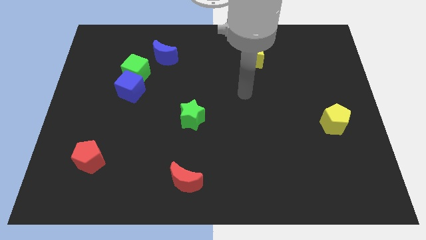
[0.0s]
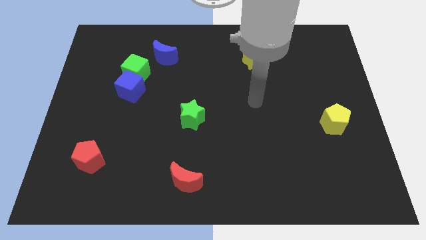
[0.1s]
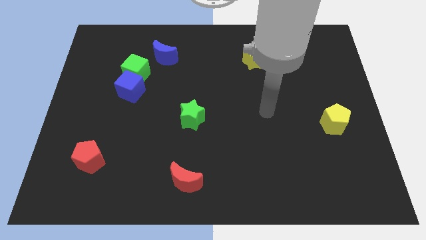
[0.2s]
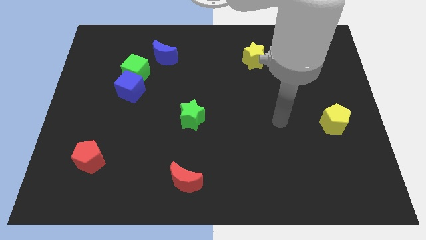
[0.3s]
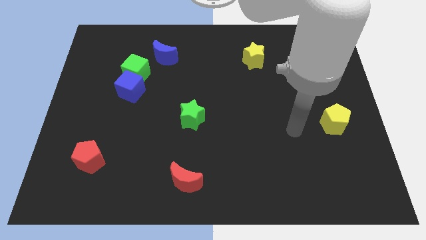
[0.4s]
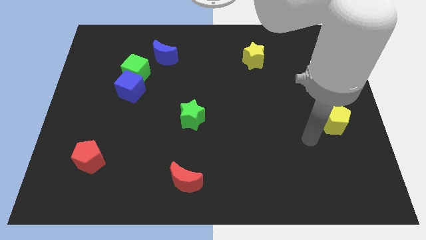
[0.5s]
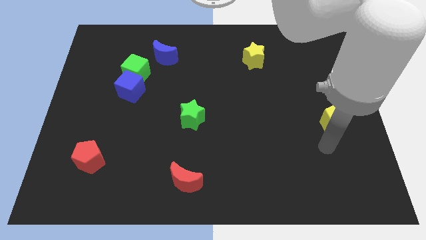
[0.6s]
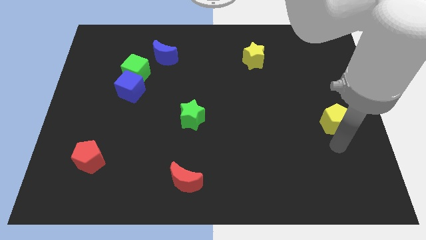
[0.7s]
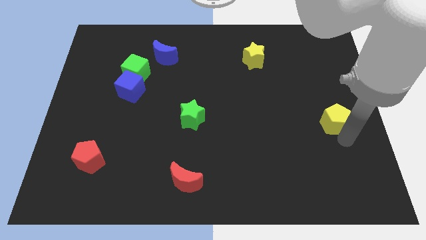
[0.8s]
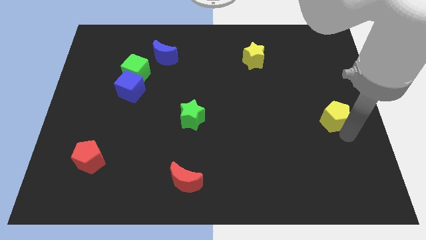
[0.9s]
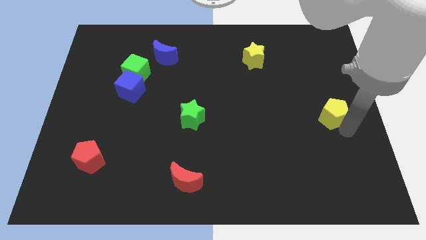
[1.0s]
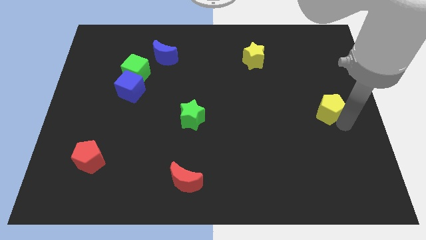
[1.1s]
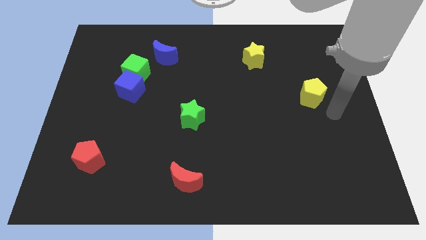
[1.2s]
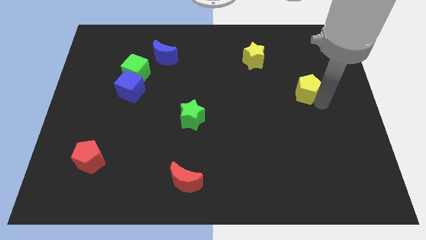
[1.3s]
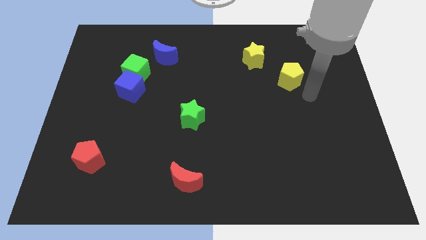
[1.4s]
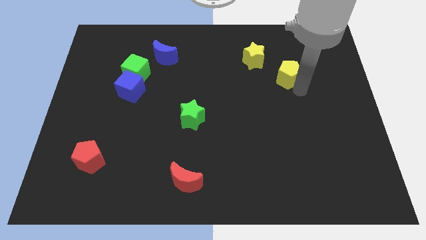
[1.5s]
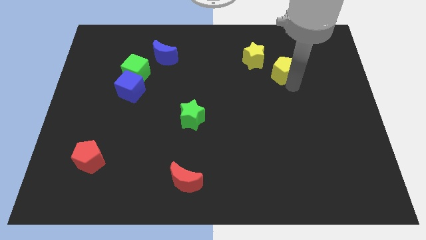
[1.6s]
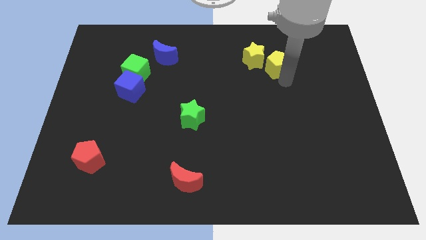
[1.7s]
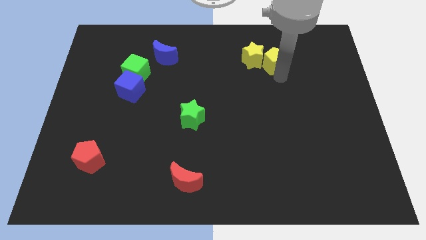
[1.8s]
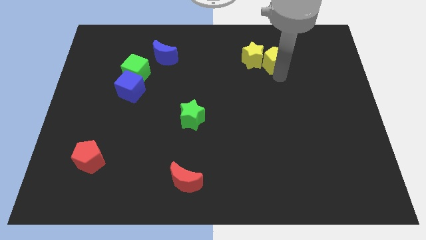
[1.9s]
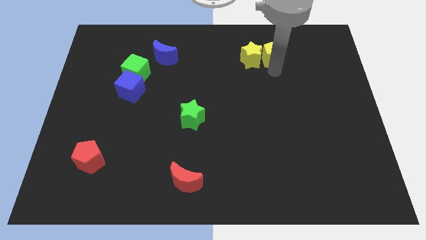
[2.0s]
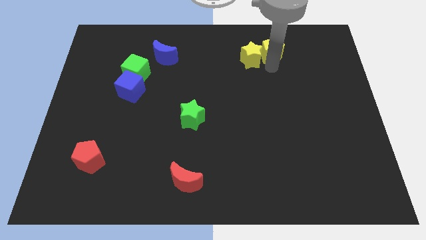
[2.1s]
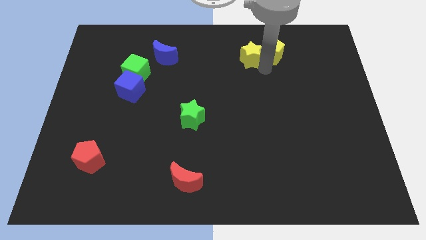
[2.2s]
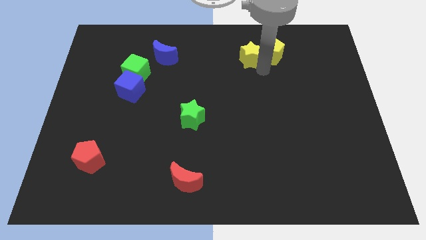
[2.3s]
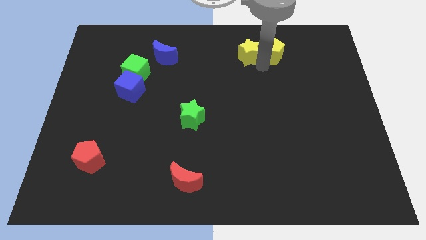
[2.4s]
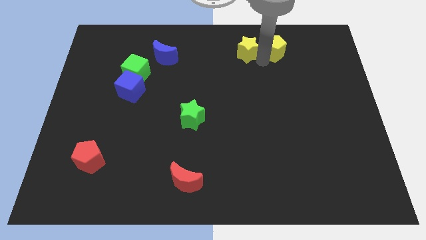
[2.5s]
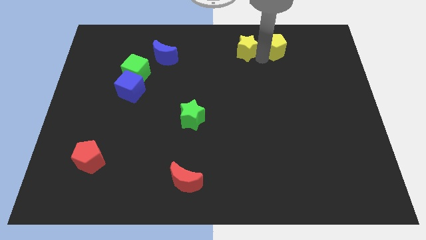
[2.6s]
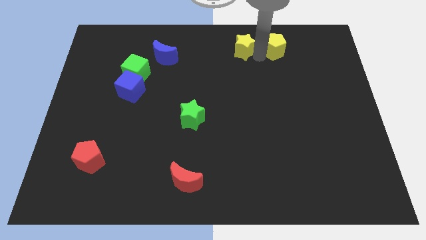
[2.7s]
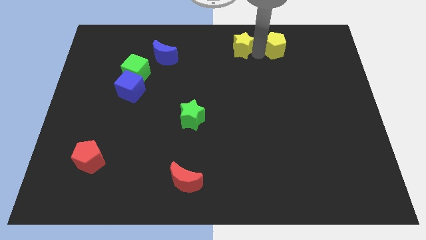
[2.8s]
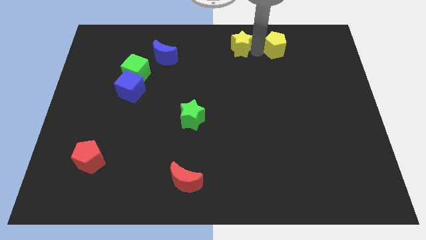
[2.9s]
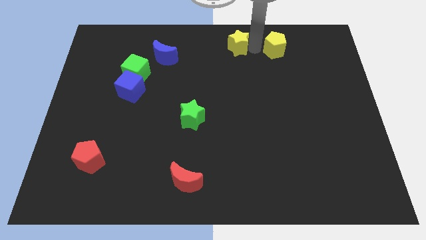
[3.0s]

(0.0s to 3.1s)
push the yellow pentagon upwards slightly

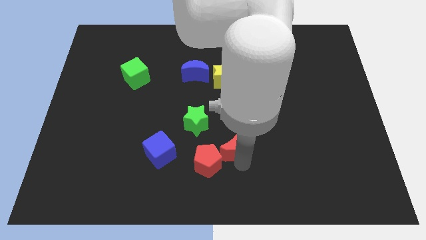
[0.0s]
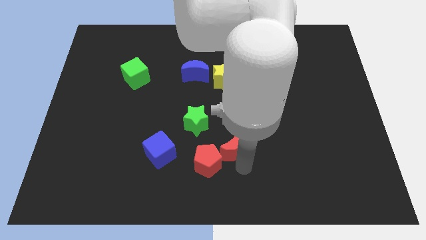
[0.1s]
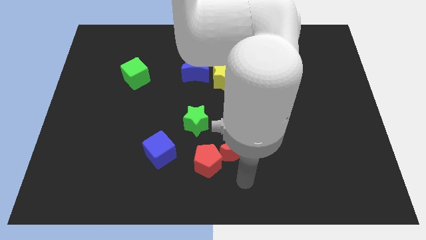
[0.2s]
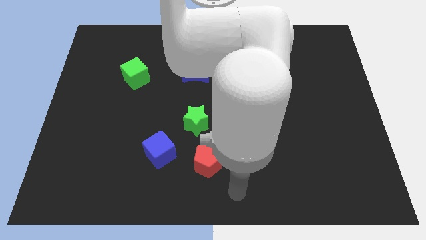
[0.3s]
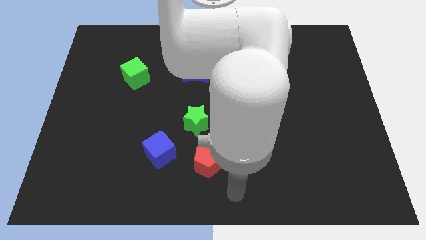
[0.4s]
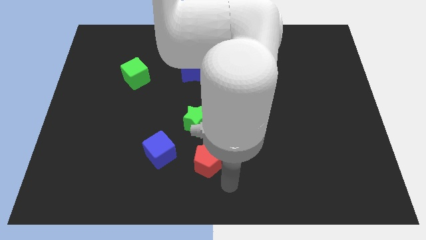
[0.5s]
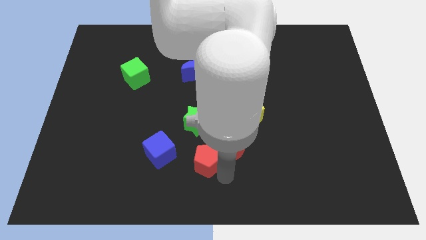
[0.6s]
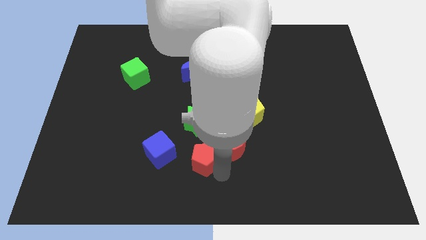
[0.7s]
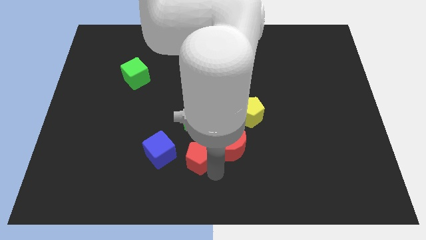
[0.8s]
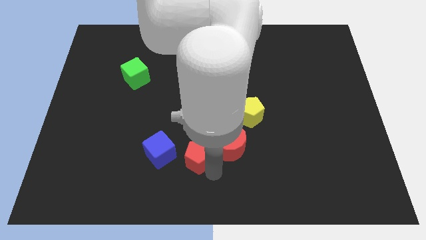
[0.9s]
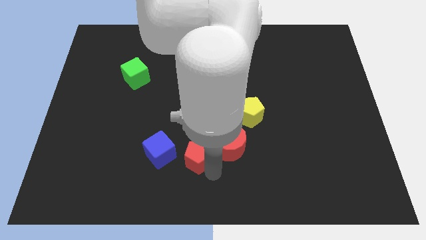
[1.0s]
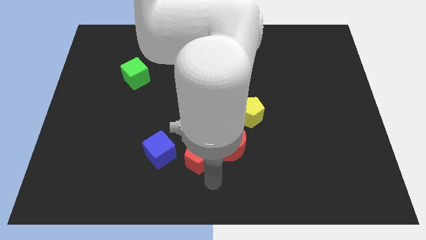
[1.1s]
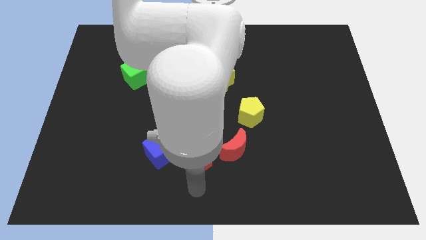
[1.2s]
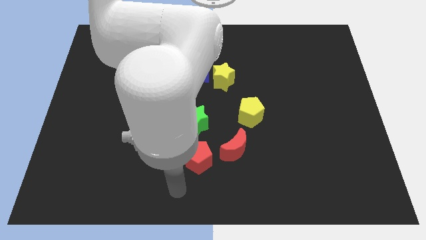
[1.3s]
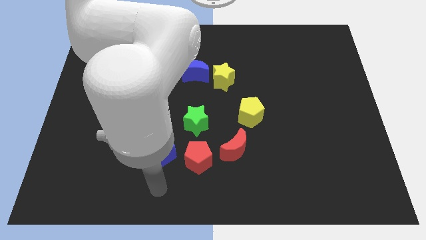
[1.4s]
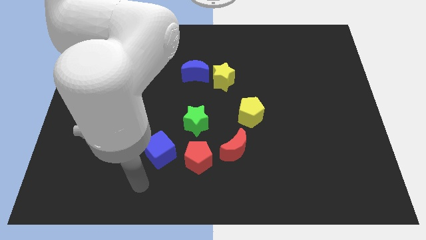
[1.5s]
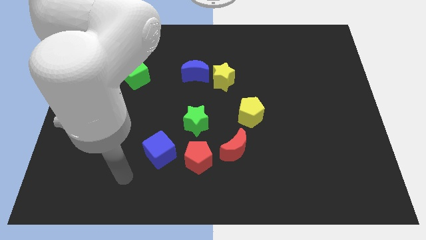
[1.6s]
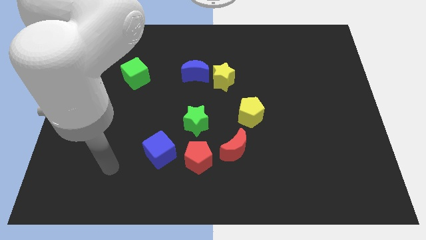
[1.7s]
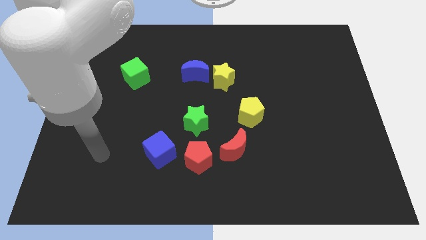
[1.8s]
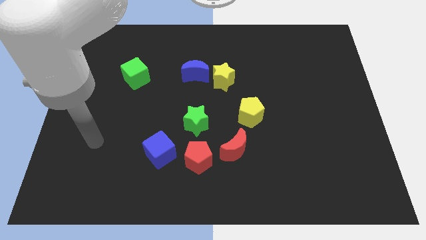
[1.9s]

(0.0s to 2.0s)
move the red pentagon slightly to the left

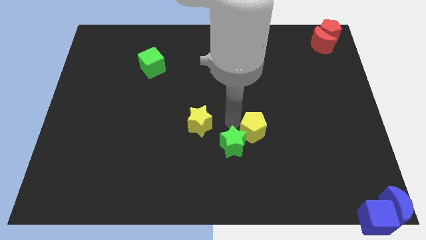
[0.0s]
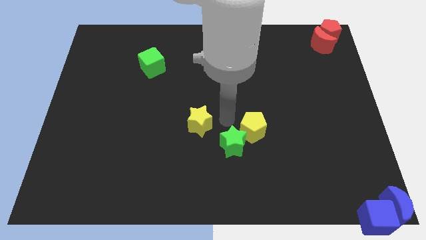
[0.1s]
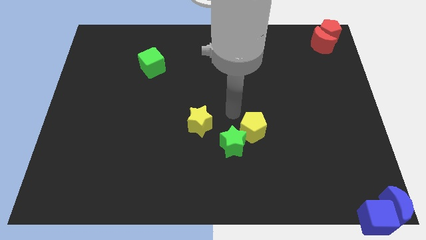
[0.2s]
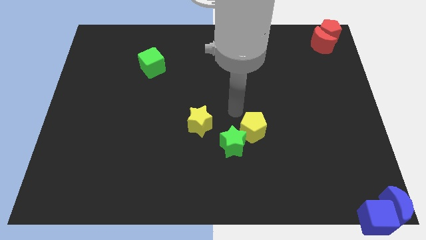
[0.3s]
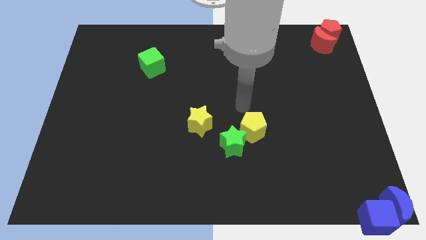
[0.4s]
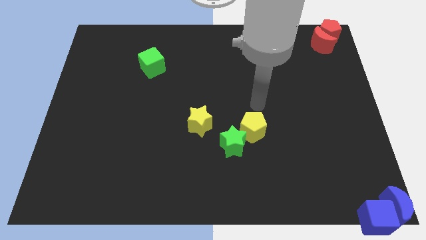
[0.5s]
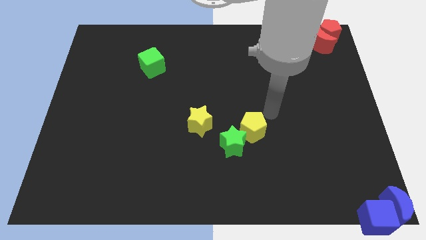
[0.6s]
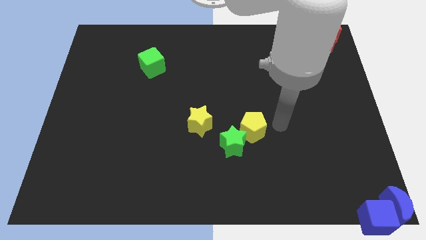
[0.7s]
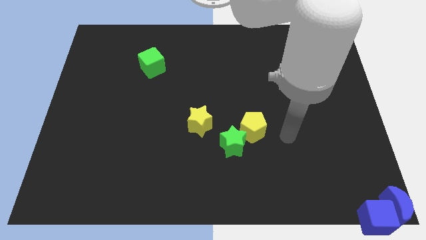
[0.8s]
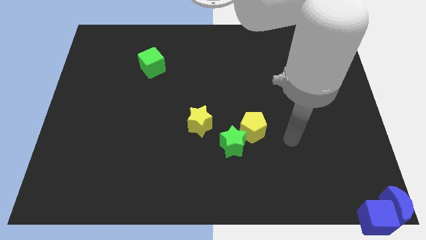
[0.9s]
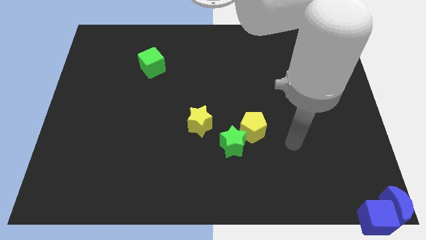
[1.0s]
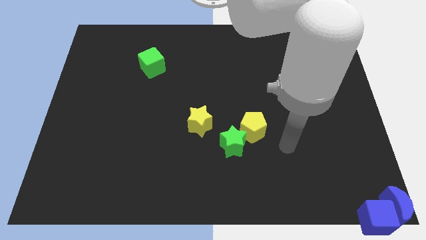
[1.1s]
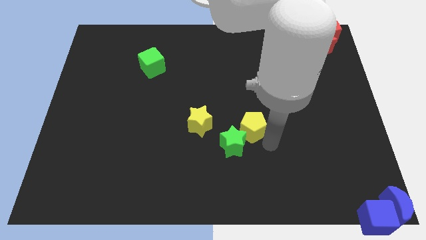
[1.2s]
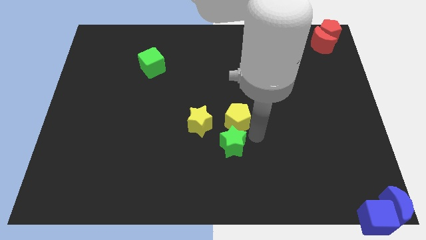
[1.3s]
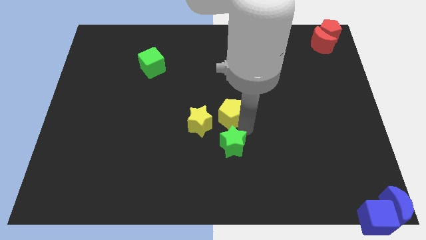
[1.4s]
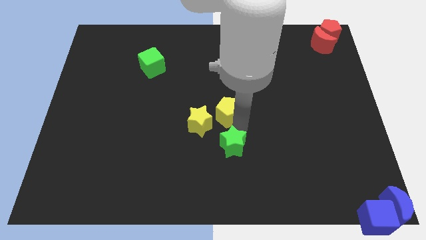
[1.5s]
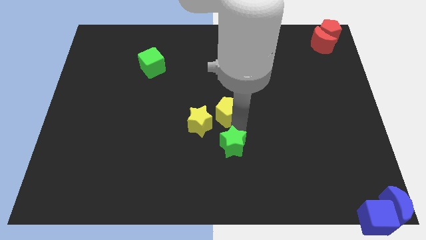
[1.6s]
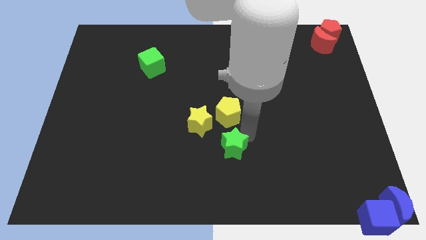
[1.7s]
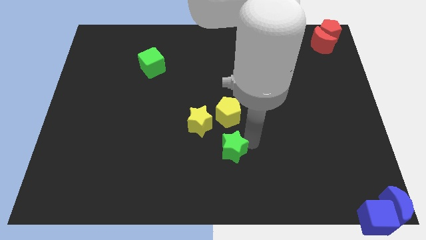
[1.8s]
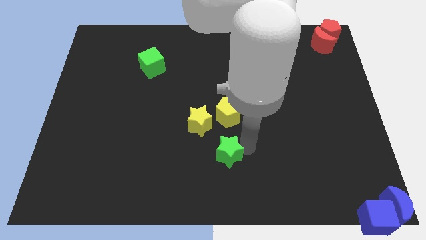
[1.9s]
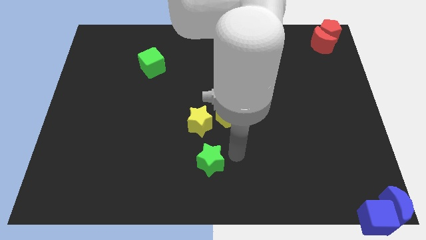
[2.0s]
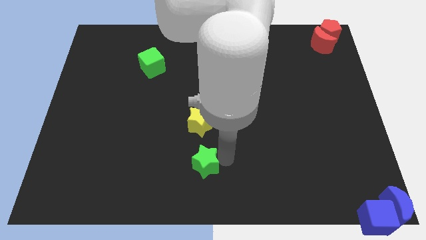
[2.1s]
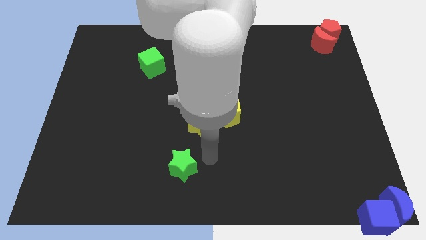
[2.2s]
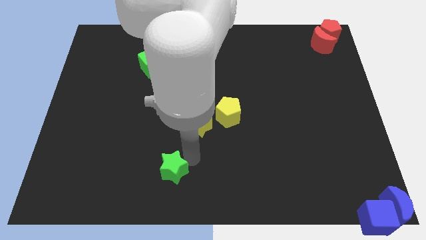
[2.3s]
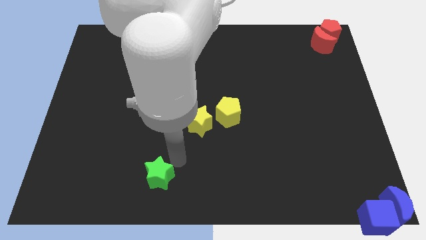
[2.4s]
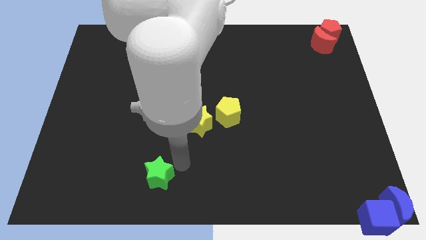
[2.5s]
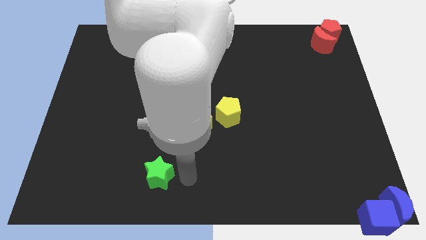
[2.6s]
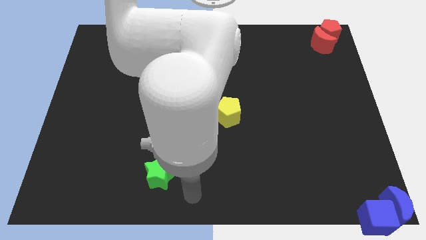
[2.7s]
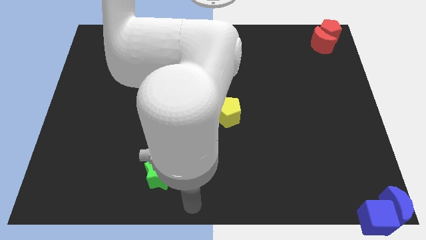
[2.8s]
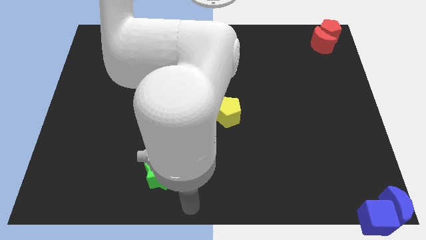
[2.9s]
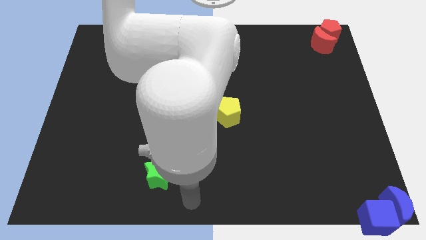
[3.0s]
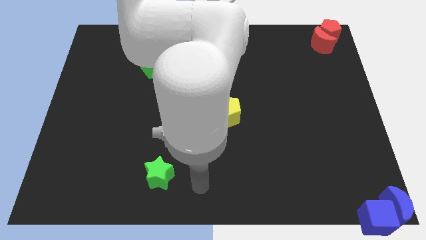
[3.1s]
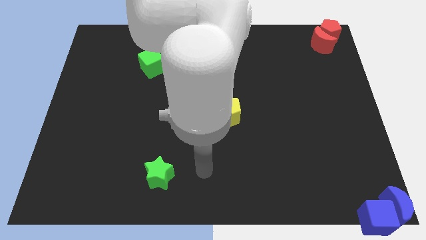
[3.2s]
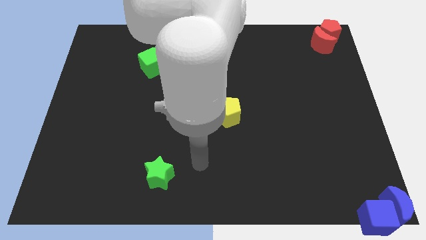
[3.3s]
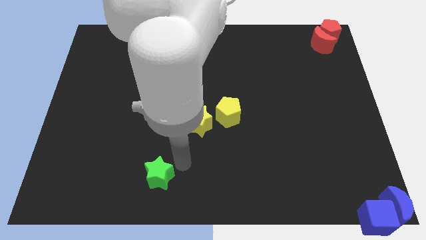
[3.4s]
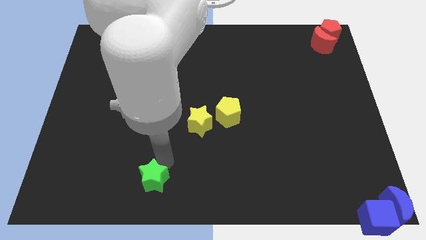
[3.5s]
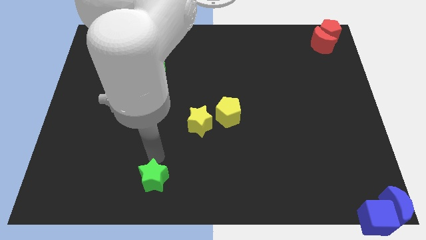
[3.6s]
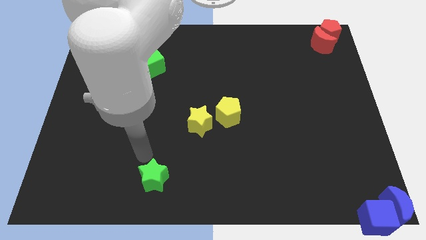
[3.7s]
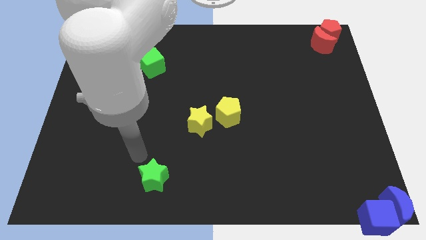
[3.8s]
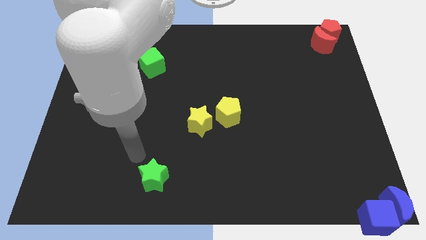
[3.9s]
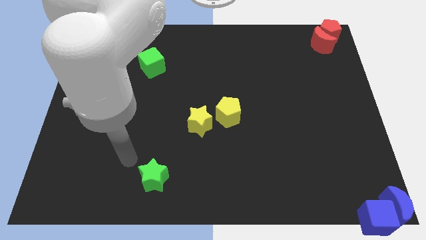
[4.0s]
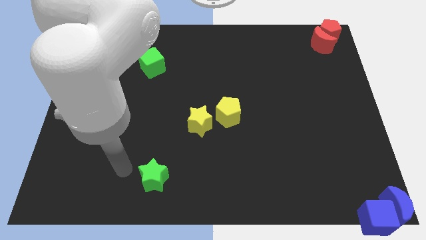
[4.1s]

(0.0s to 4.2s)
separate the green star from the yellow pentagon
